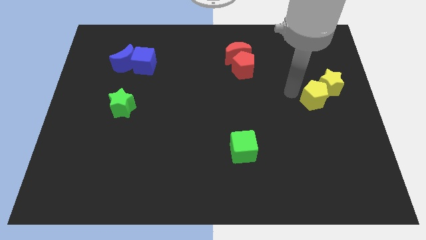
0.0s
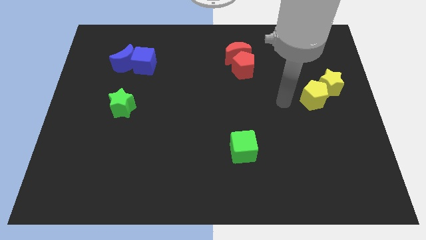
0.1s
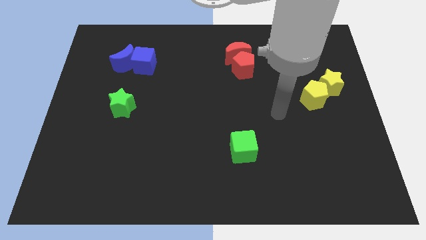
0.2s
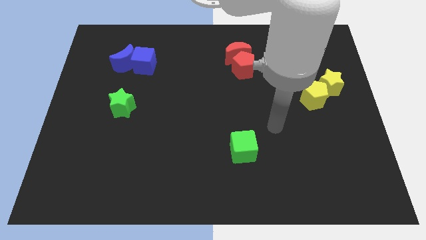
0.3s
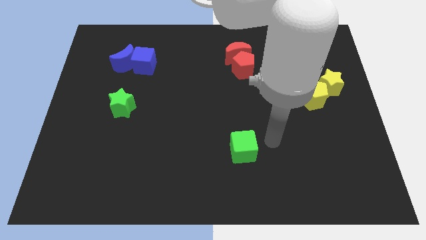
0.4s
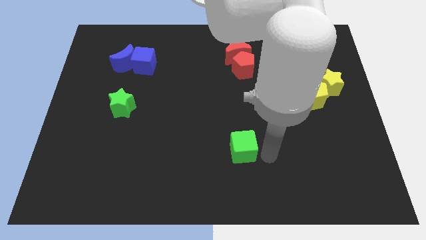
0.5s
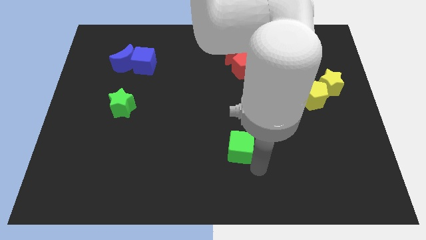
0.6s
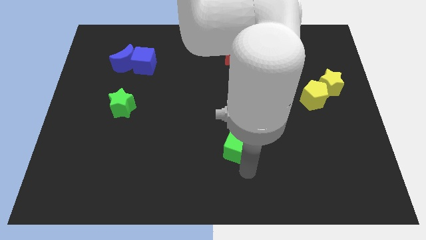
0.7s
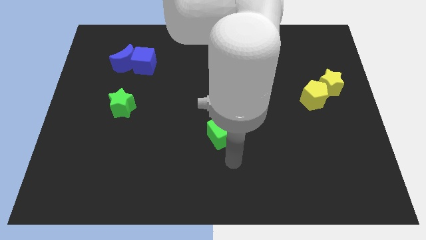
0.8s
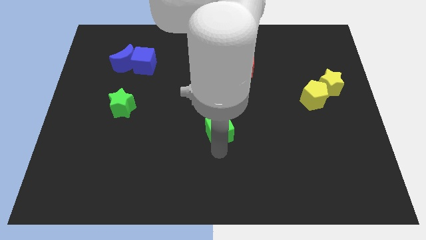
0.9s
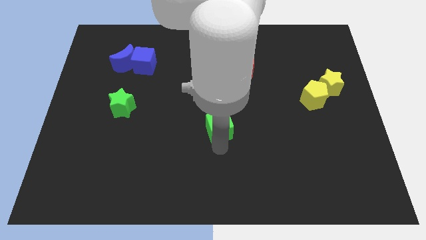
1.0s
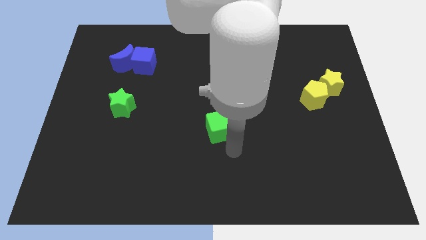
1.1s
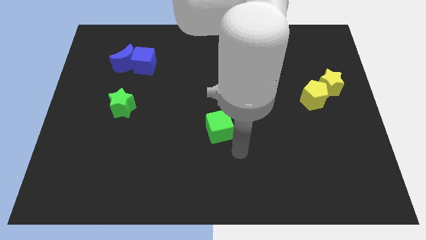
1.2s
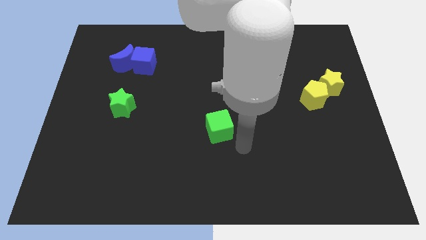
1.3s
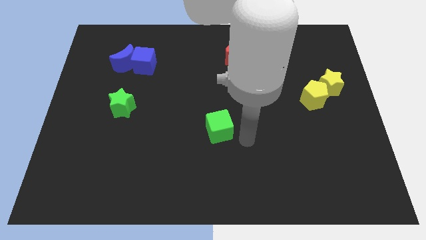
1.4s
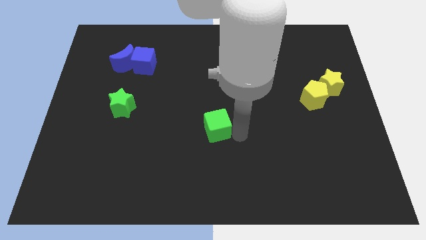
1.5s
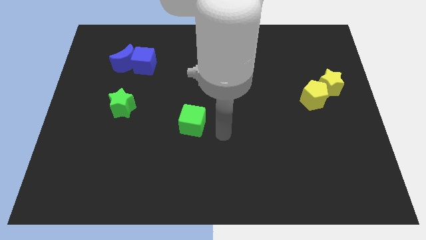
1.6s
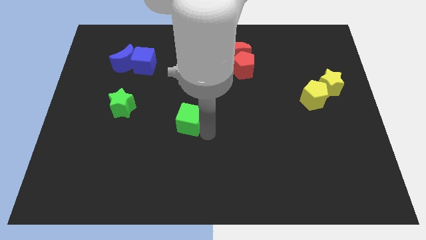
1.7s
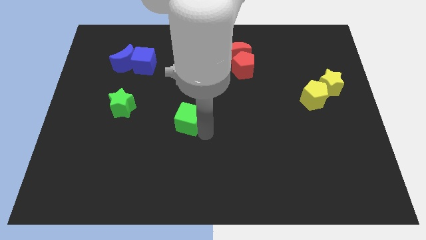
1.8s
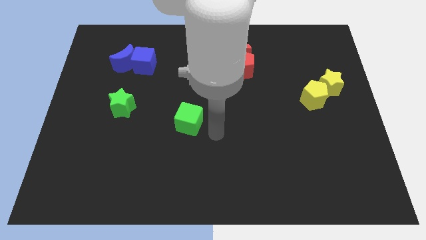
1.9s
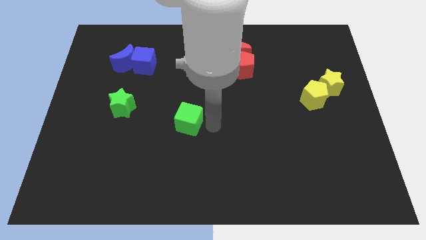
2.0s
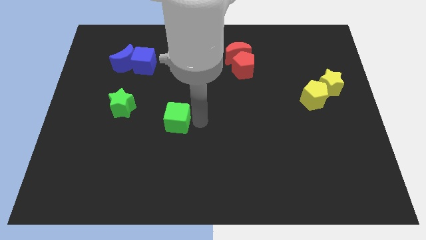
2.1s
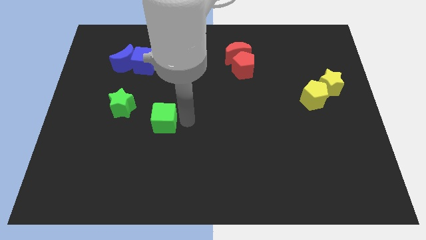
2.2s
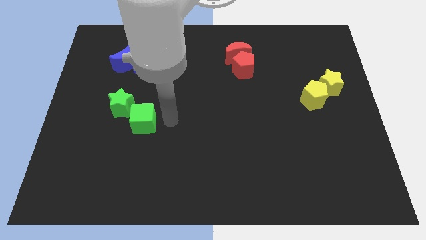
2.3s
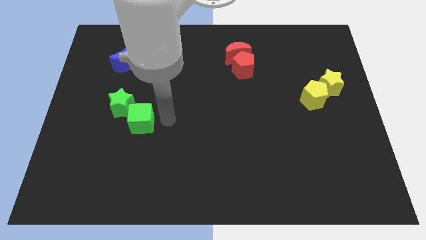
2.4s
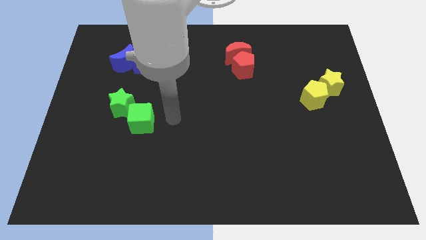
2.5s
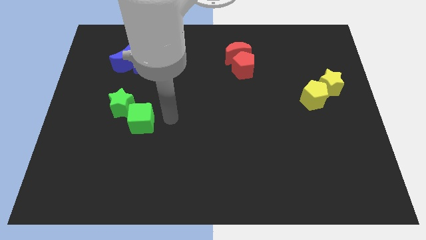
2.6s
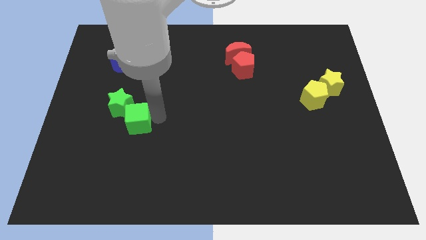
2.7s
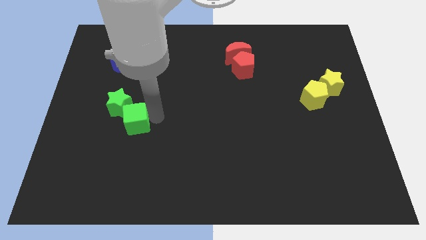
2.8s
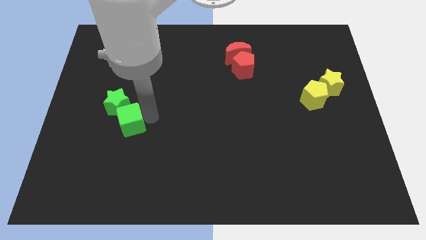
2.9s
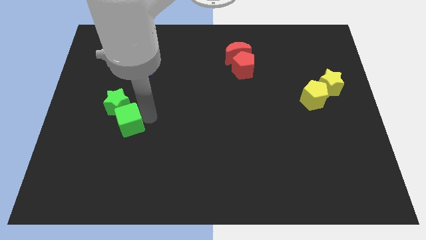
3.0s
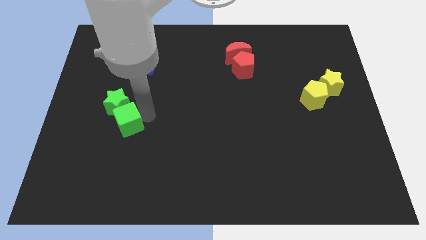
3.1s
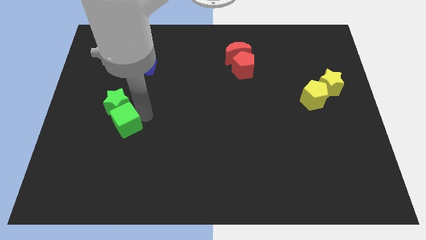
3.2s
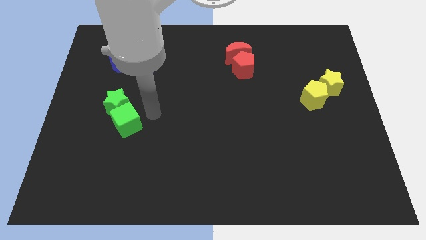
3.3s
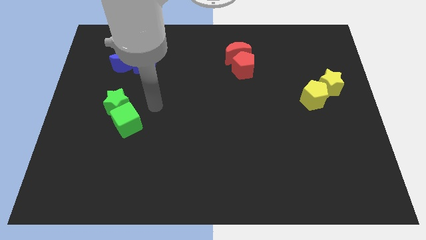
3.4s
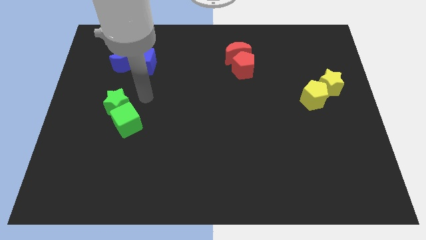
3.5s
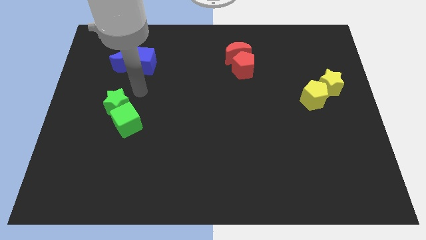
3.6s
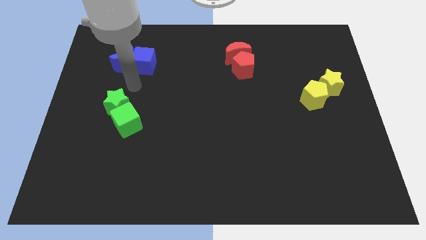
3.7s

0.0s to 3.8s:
move the green cube below the green star

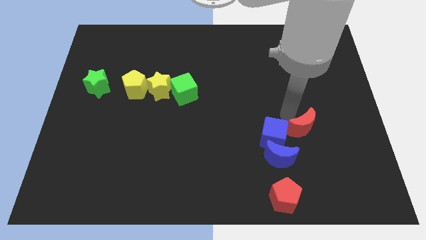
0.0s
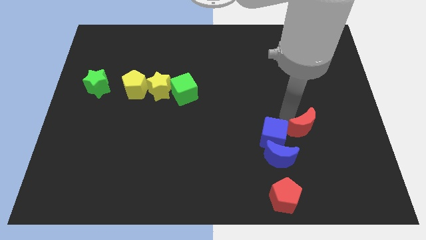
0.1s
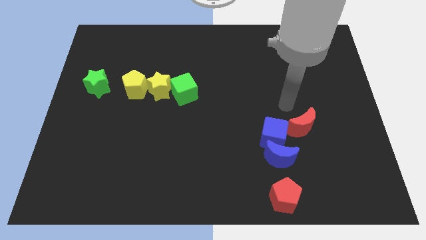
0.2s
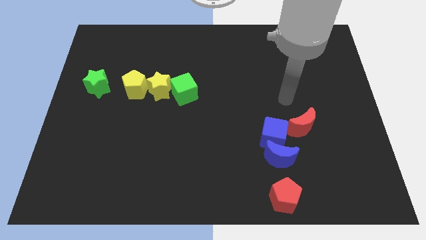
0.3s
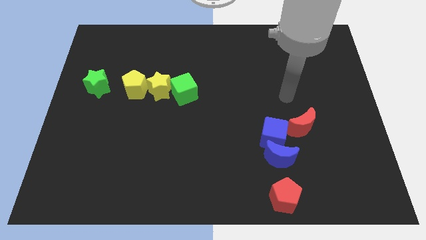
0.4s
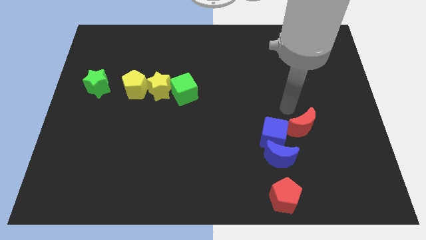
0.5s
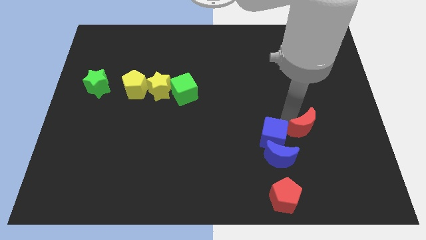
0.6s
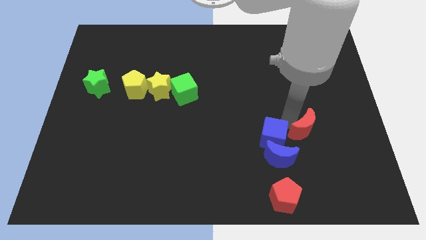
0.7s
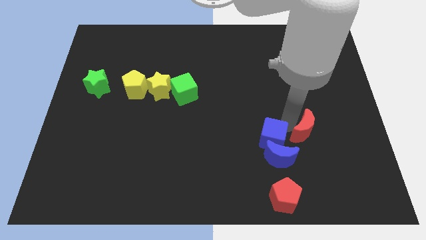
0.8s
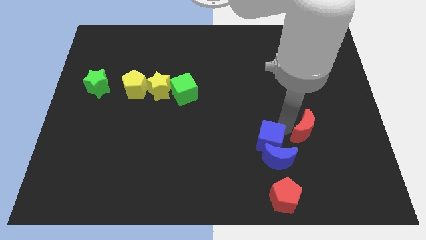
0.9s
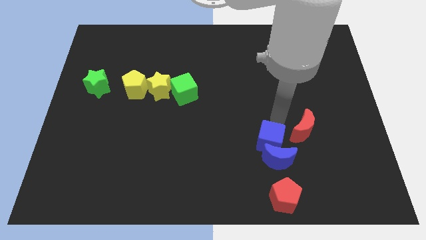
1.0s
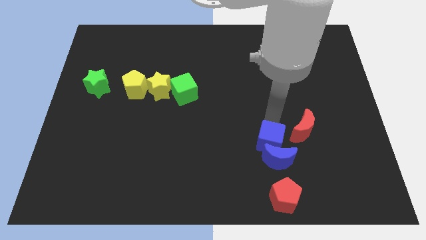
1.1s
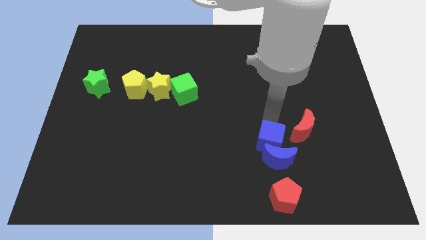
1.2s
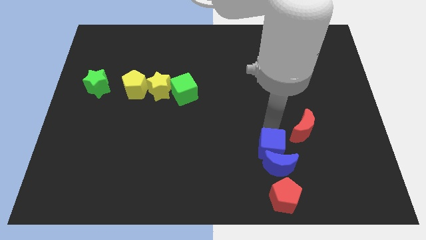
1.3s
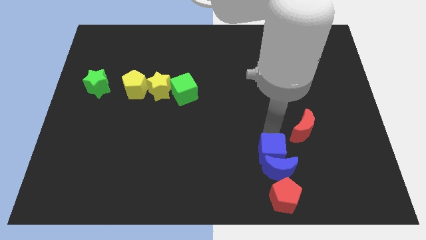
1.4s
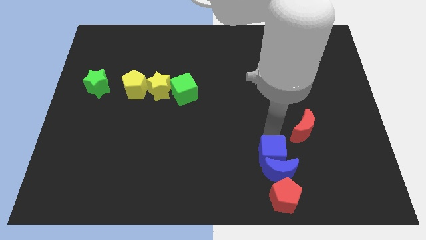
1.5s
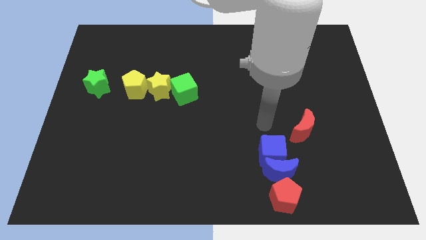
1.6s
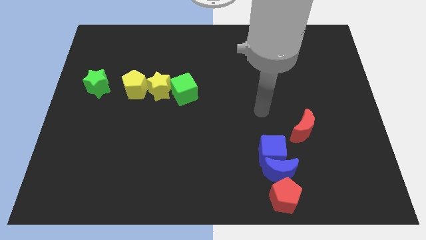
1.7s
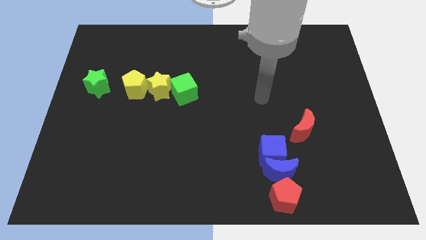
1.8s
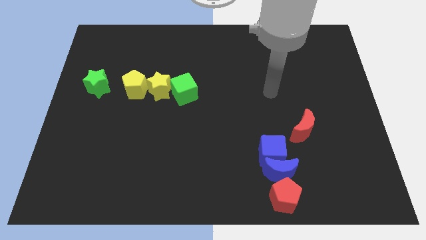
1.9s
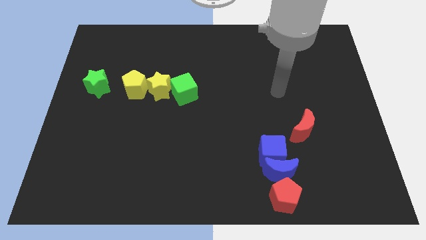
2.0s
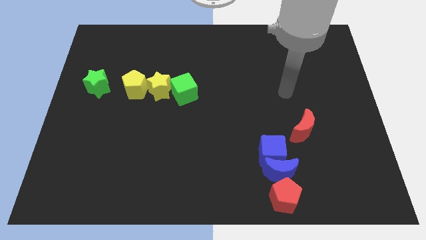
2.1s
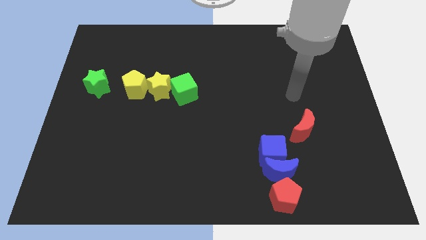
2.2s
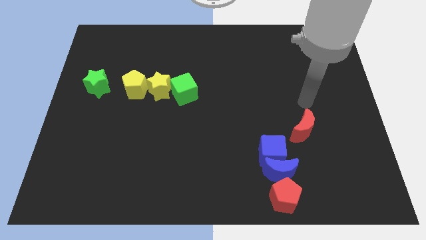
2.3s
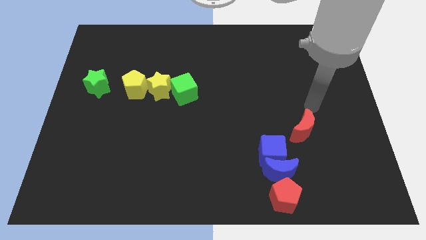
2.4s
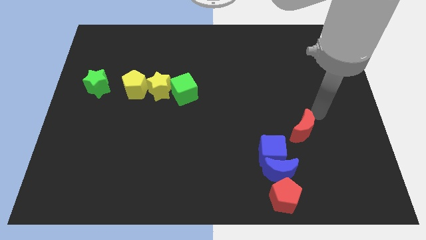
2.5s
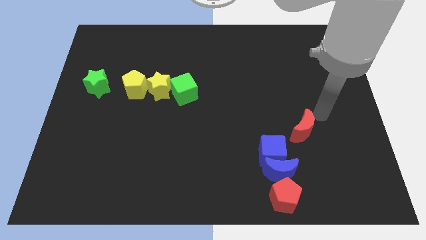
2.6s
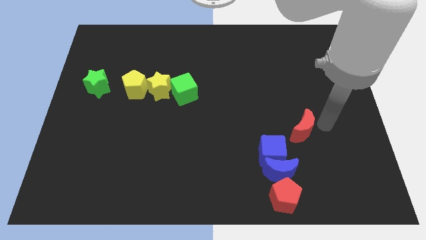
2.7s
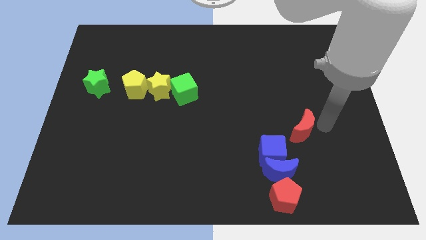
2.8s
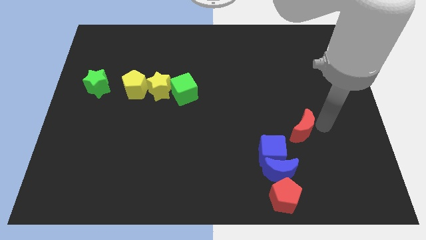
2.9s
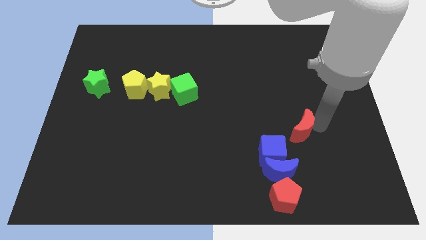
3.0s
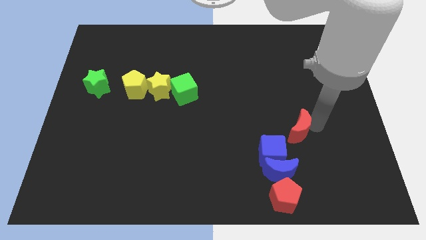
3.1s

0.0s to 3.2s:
push blue blocks slightly towards bottom

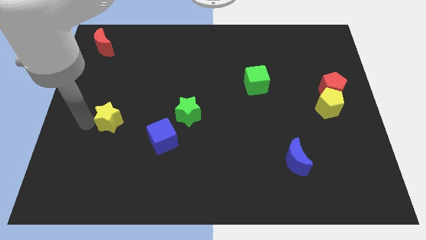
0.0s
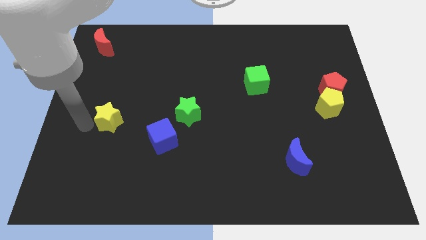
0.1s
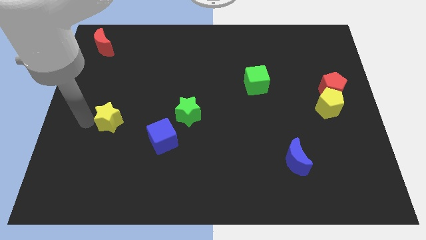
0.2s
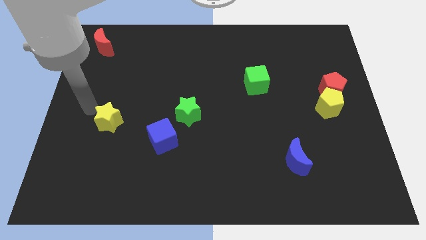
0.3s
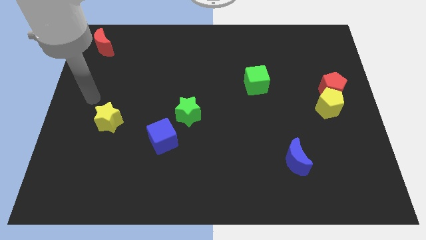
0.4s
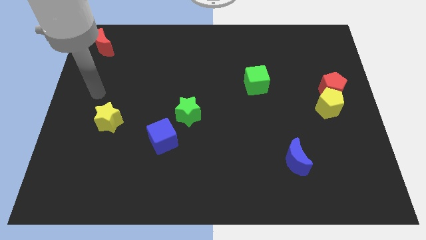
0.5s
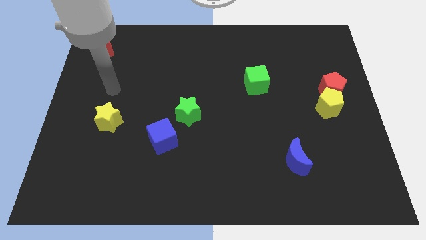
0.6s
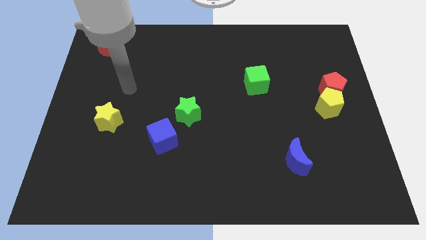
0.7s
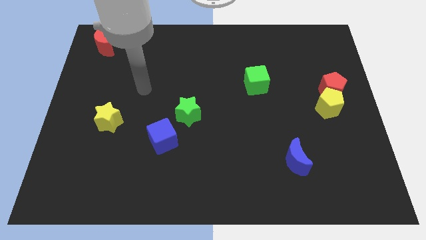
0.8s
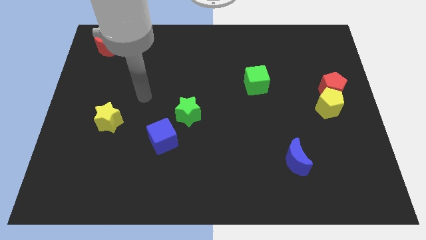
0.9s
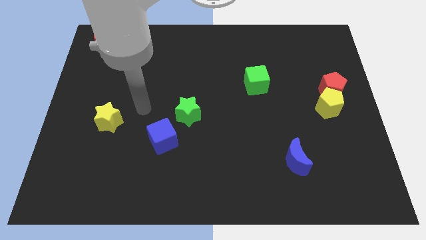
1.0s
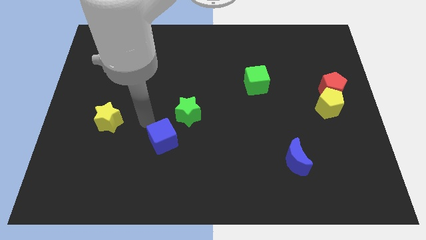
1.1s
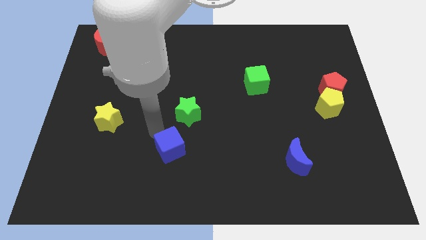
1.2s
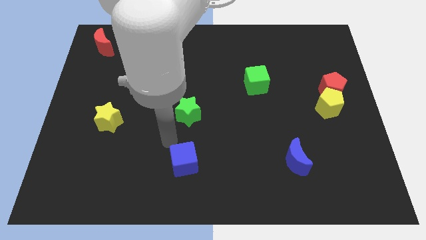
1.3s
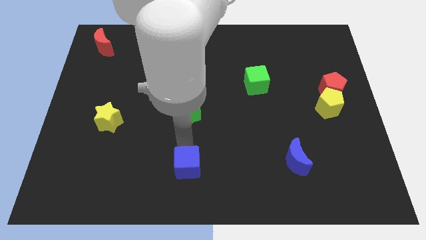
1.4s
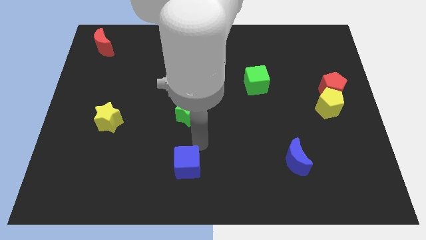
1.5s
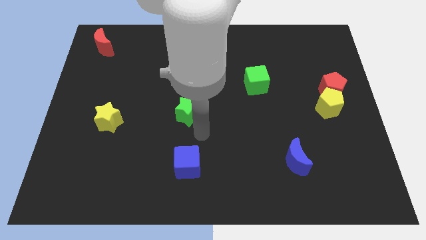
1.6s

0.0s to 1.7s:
push the blue cube below the green star

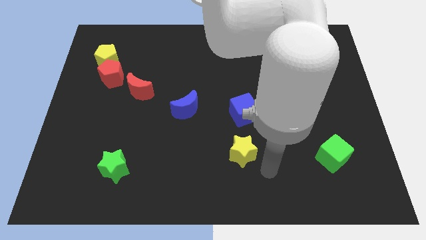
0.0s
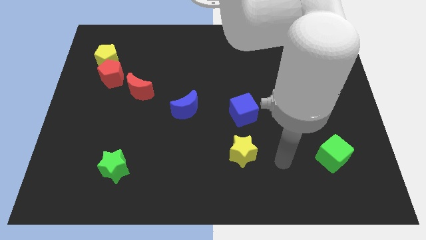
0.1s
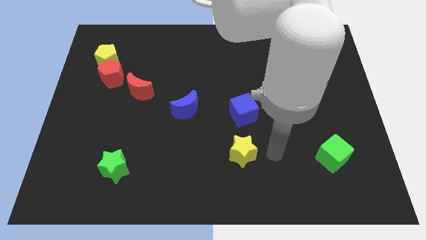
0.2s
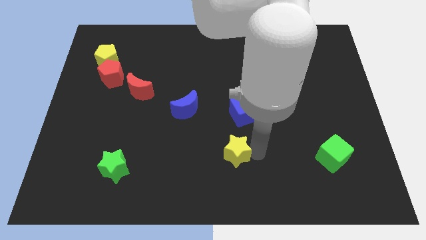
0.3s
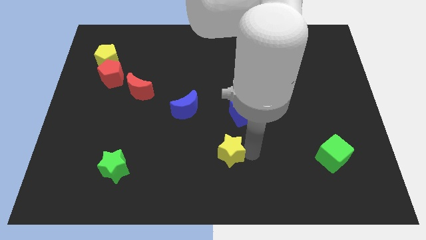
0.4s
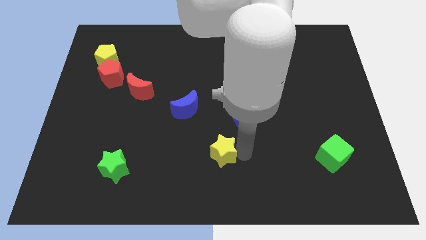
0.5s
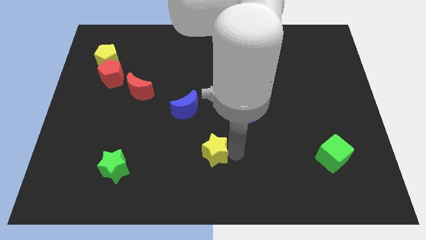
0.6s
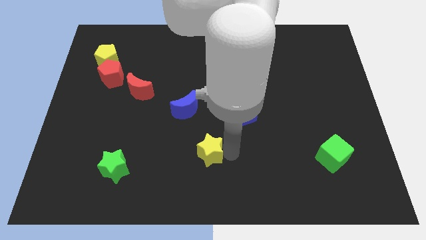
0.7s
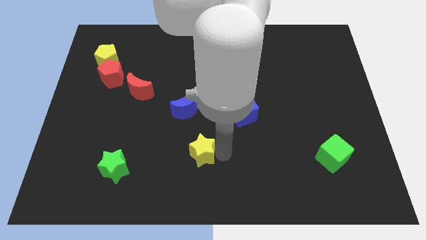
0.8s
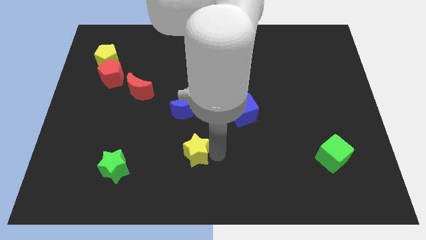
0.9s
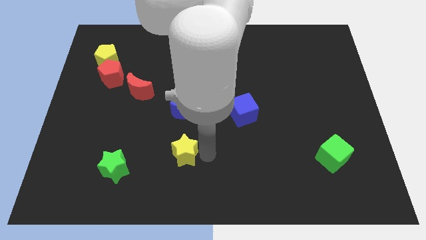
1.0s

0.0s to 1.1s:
place the yellow star vertically below the blue crescent
